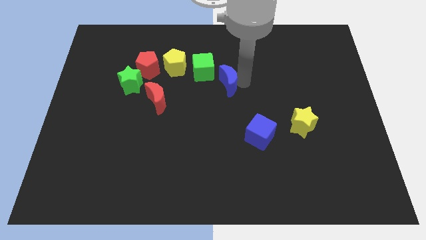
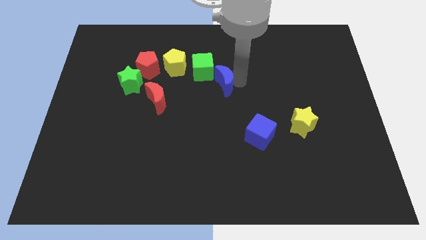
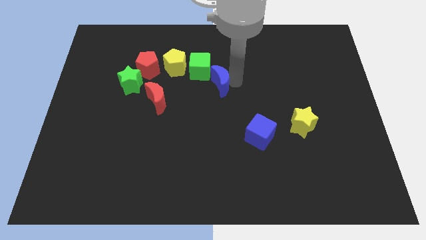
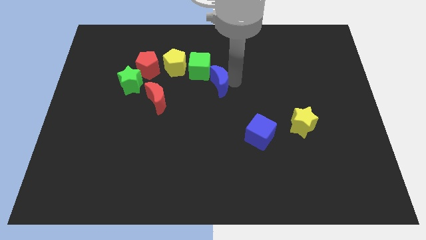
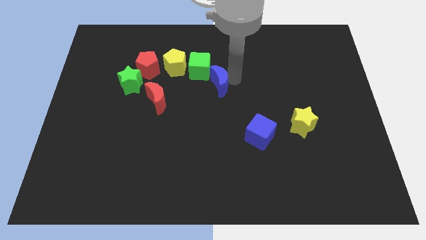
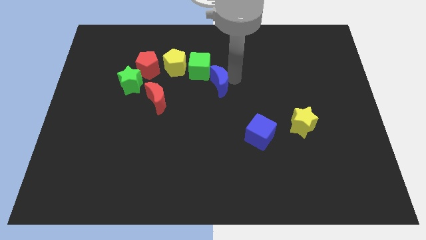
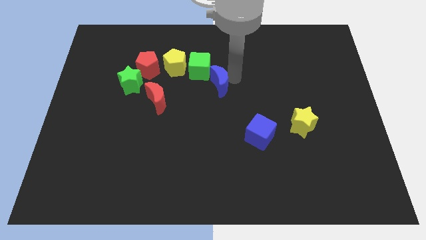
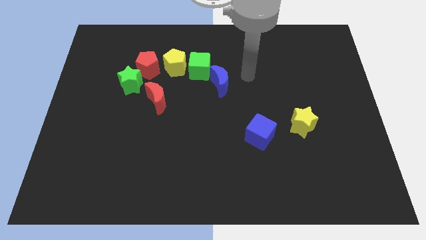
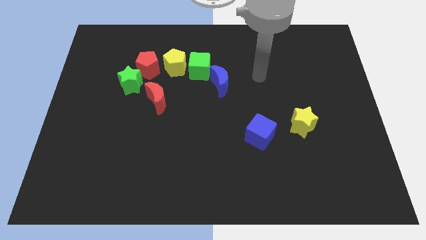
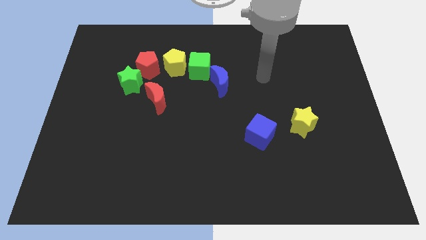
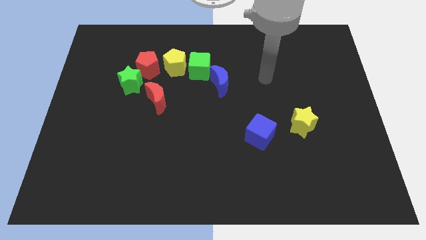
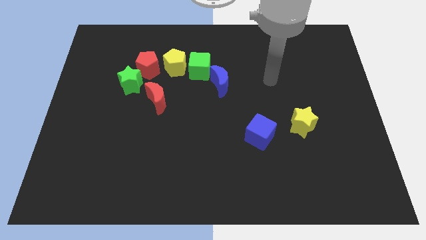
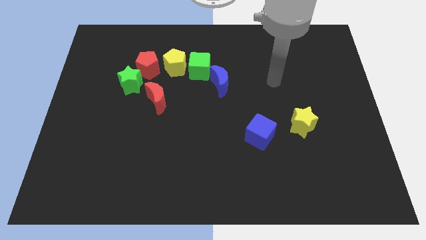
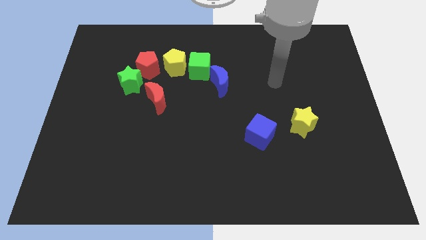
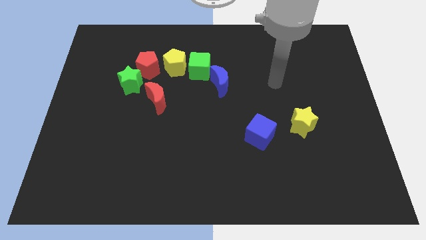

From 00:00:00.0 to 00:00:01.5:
push blue crescent into green cube

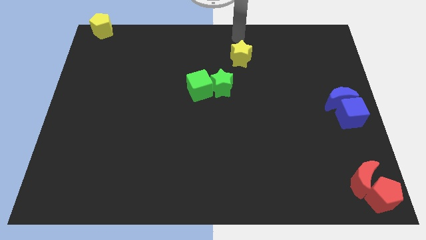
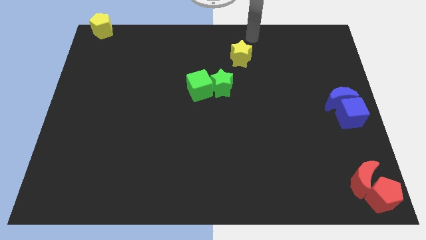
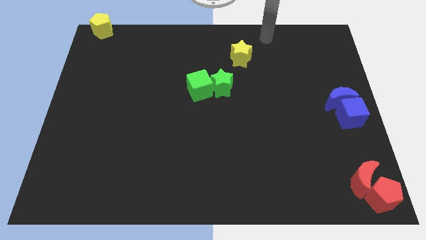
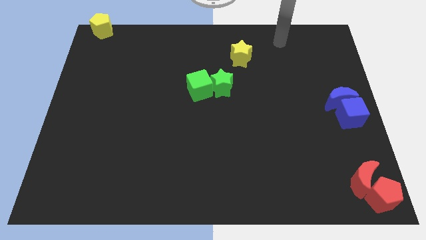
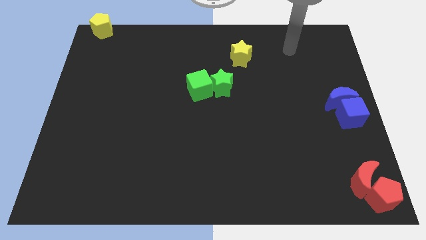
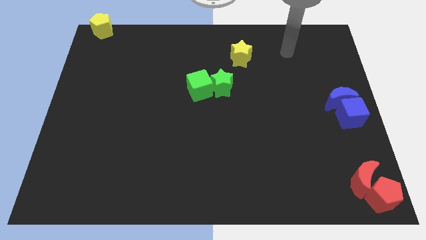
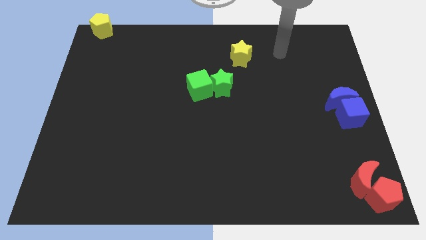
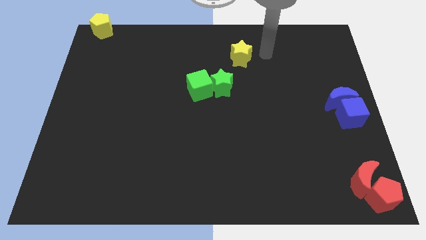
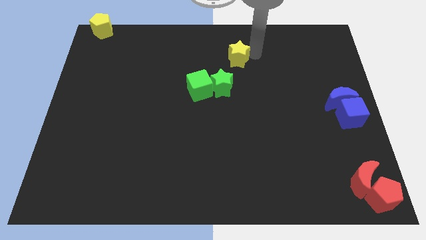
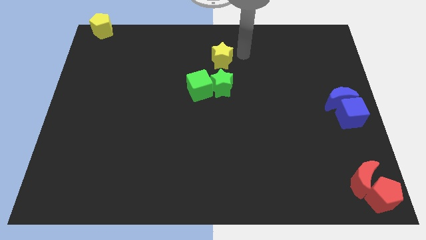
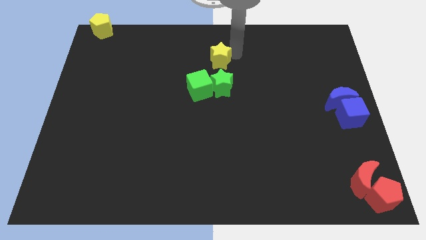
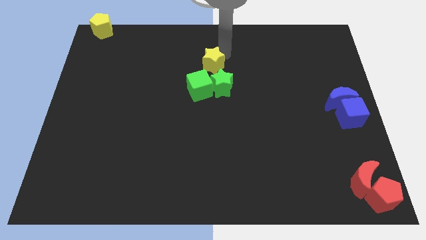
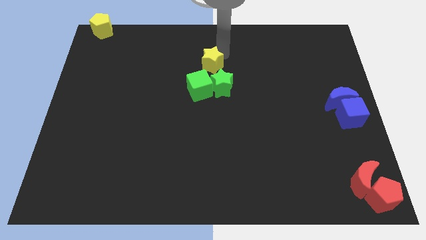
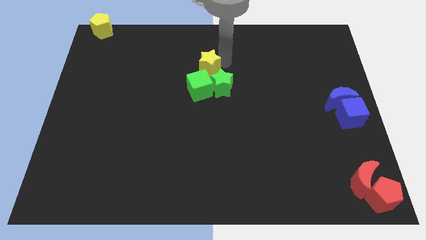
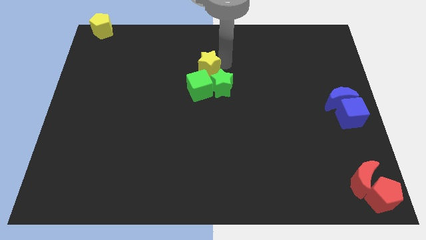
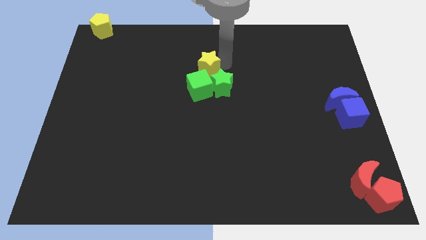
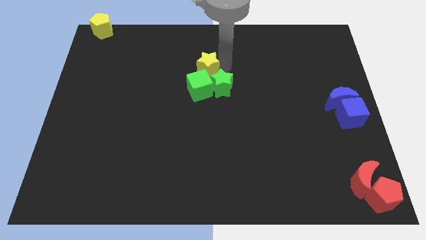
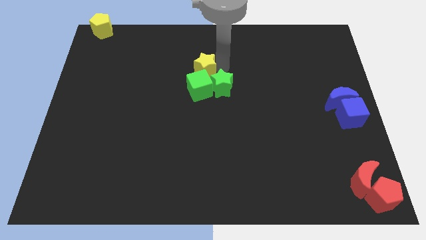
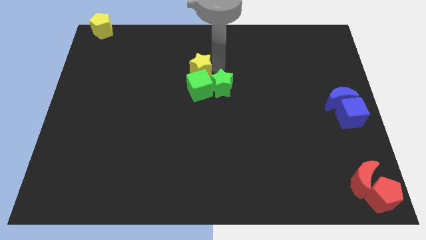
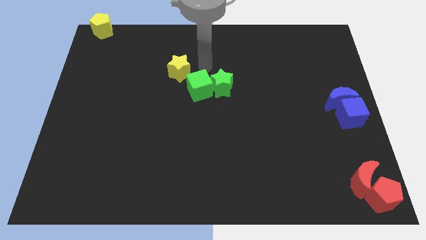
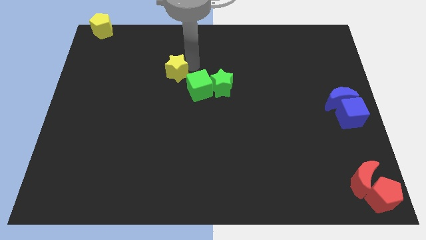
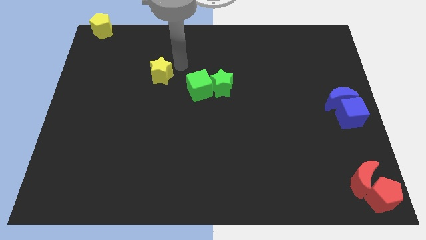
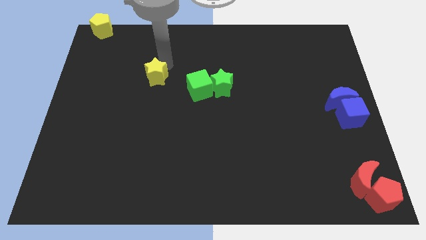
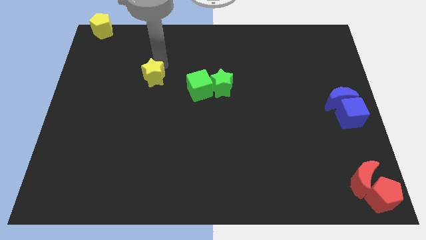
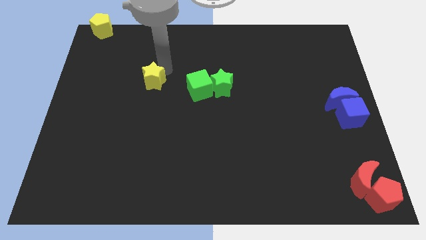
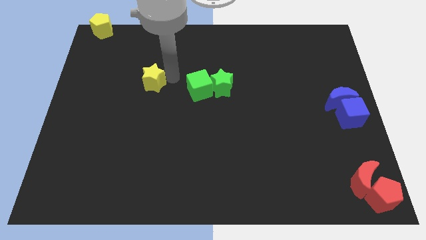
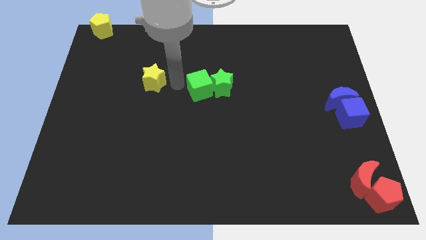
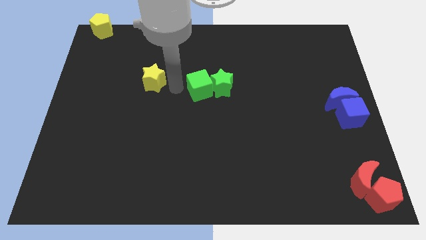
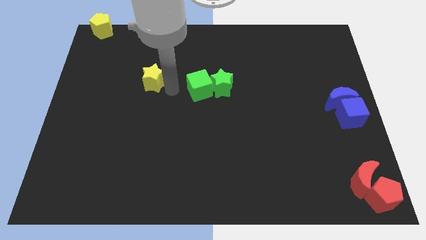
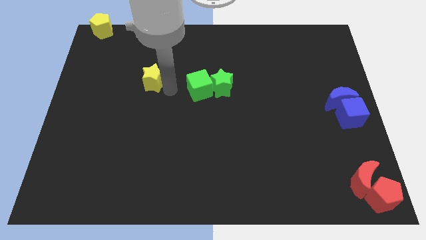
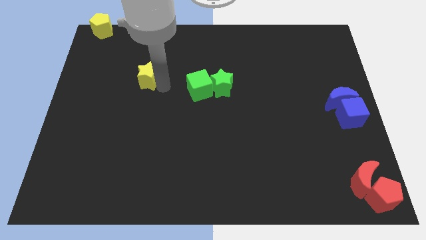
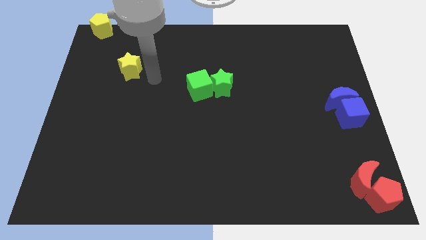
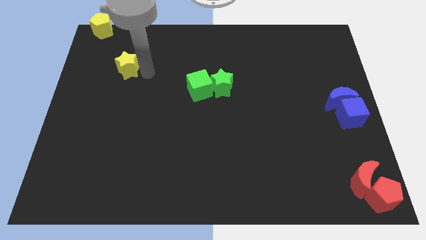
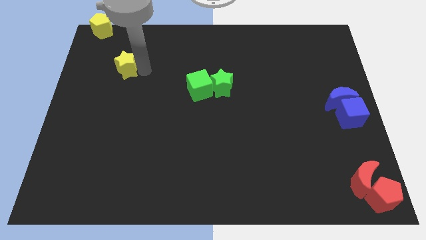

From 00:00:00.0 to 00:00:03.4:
place the yellow star diagonally on the bottom right side of the yellow pentagon

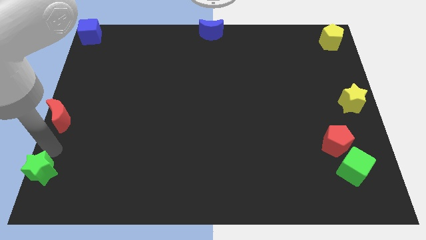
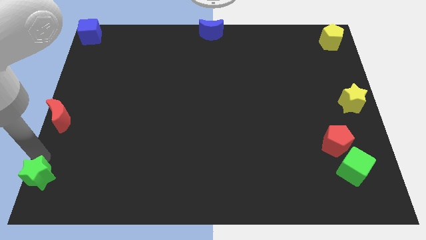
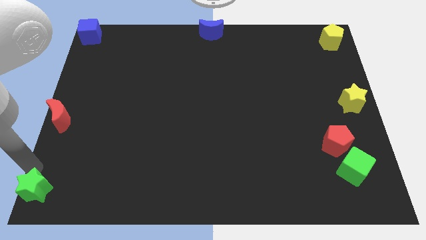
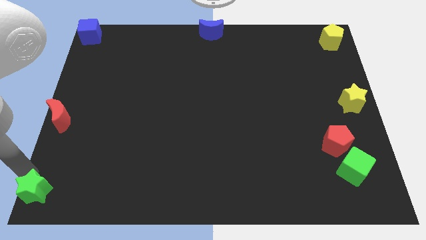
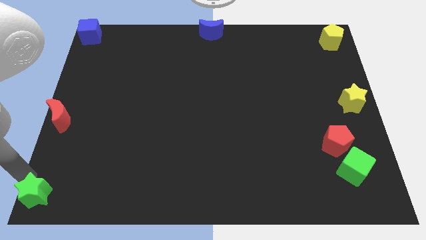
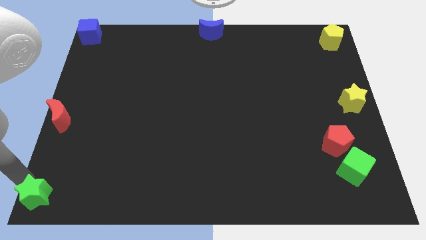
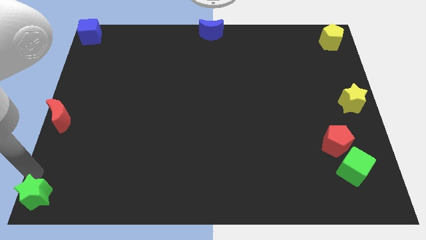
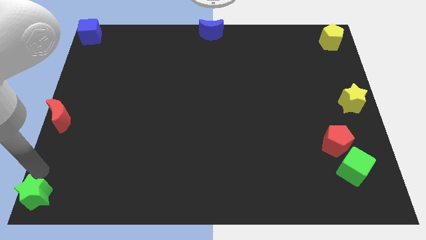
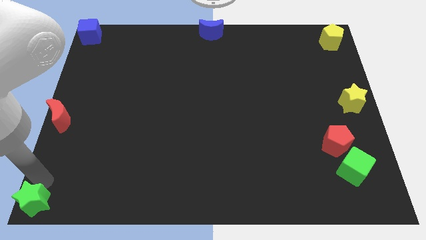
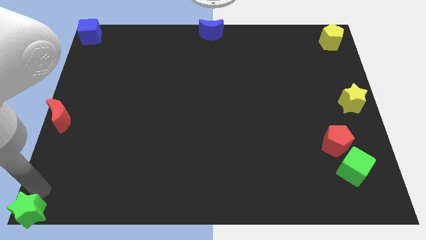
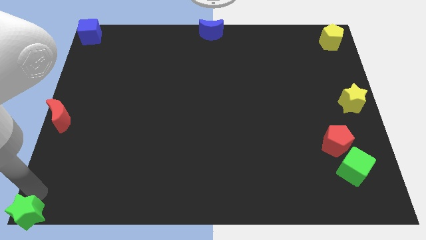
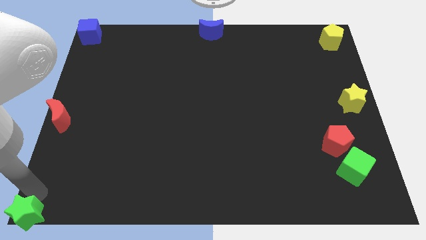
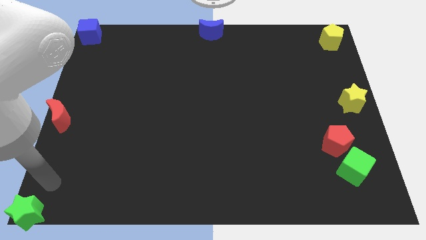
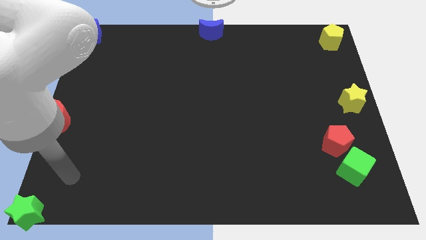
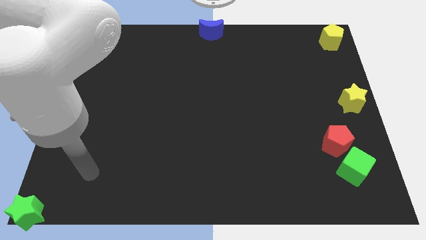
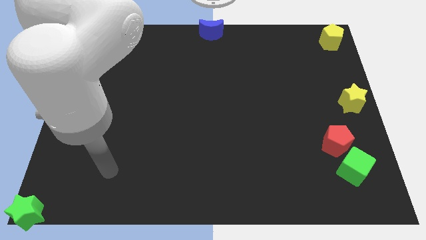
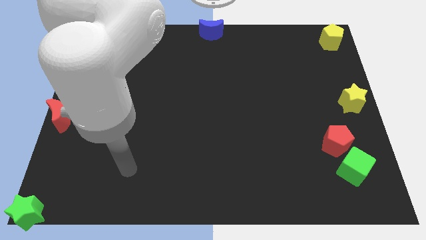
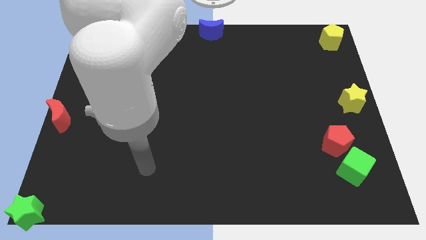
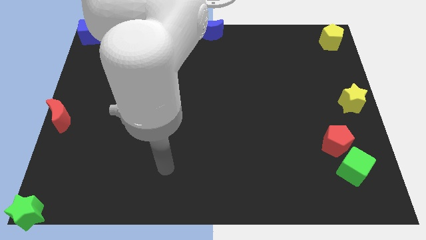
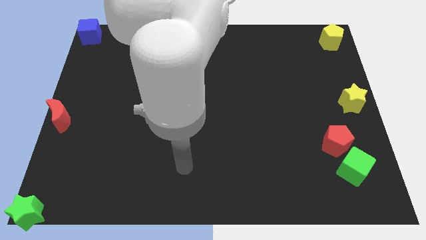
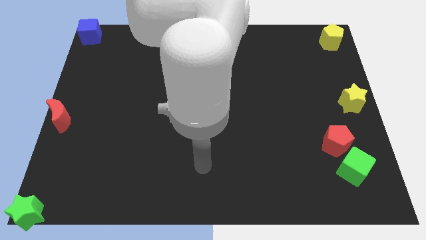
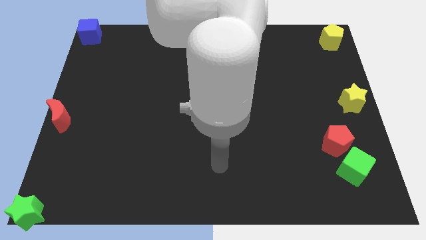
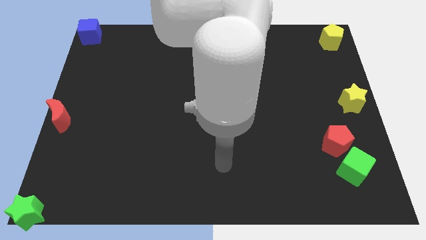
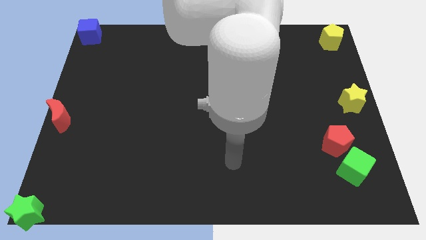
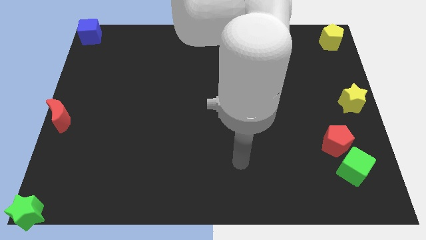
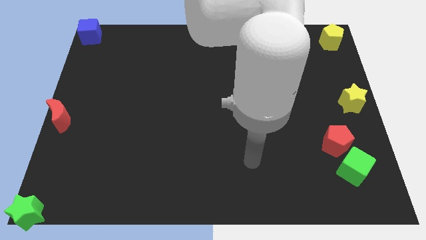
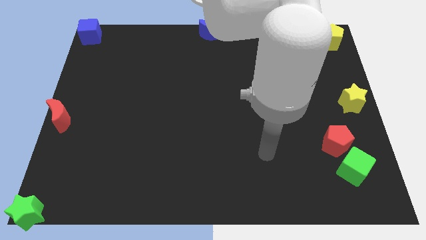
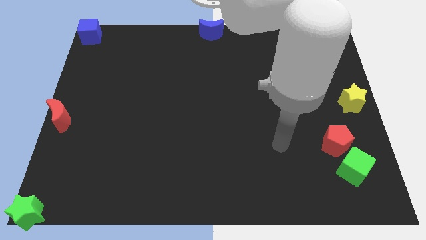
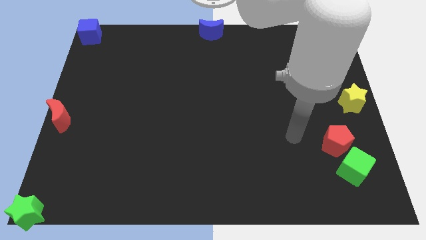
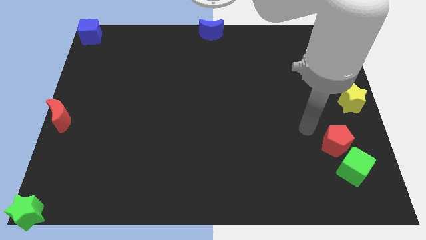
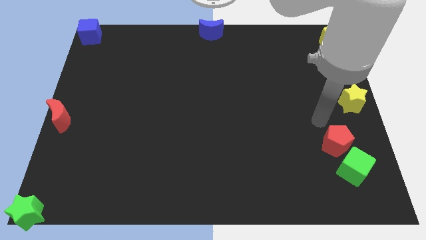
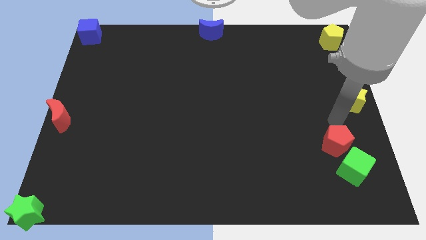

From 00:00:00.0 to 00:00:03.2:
push the green star to the bottom left

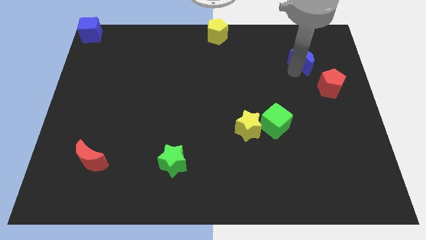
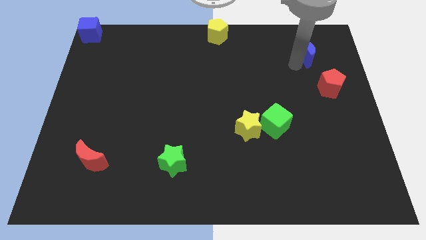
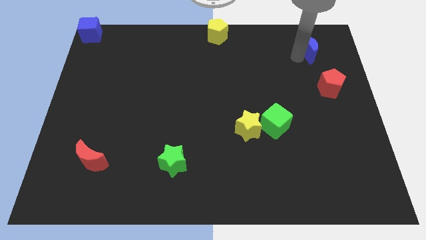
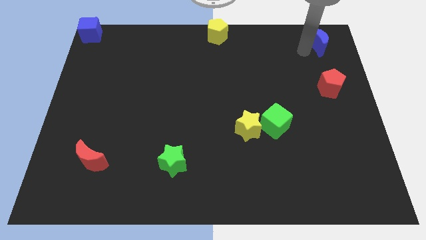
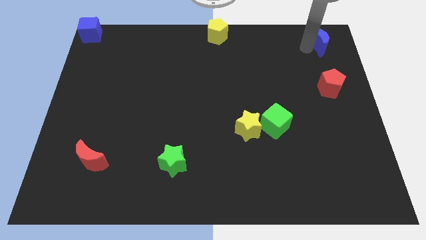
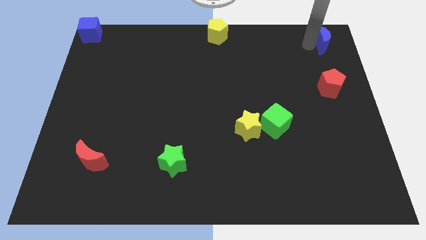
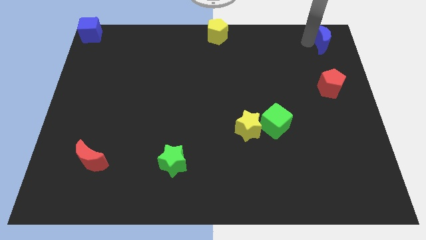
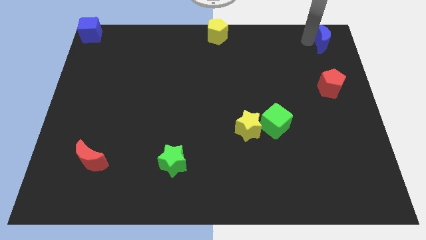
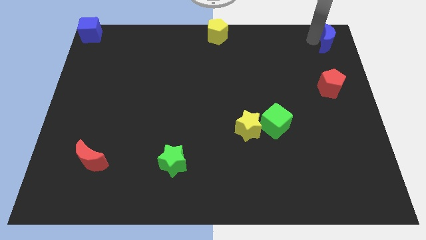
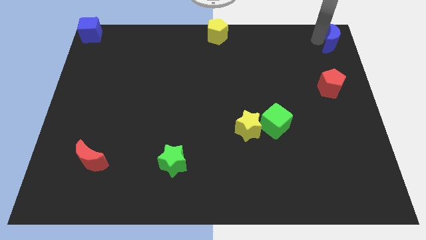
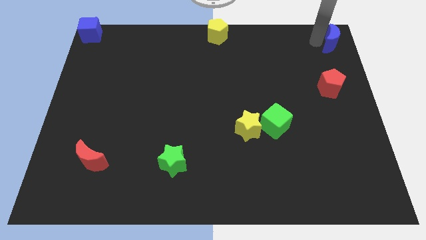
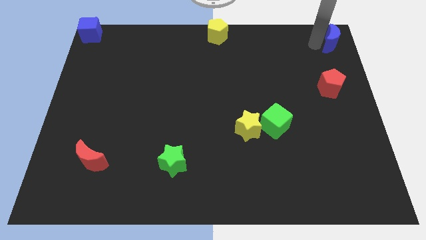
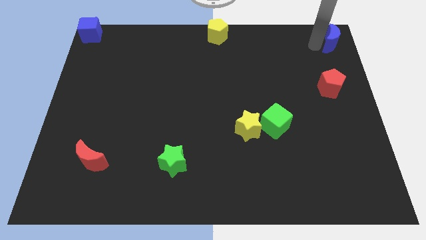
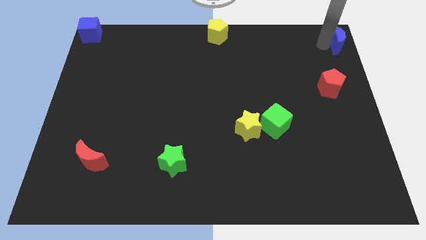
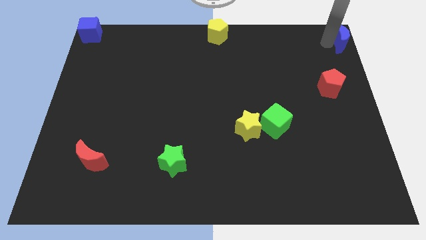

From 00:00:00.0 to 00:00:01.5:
push the blue crescent to the top right corner of the board
